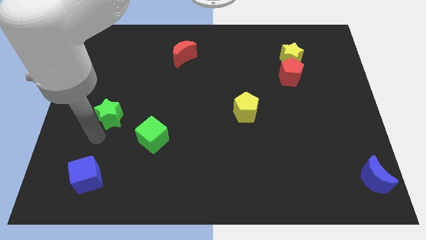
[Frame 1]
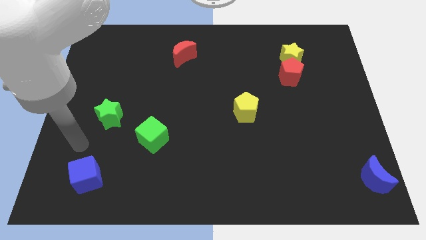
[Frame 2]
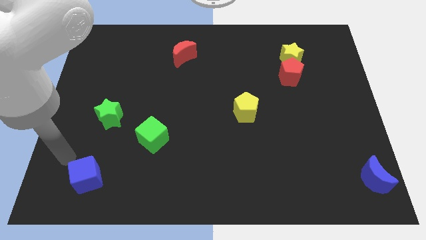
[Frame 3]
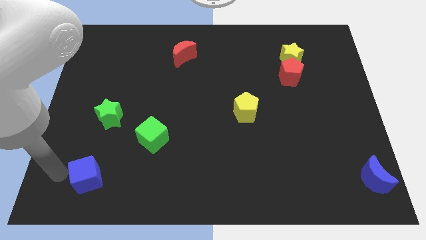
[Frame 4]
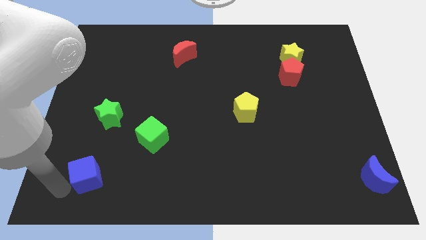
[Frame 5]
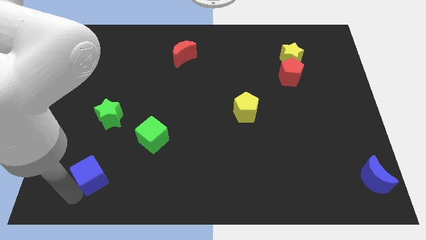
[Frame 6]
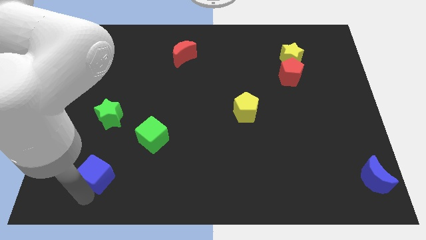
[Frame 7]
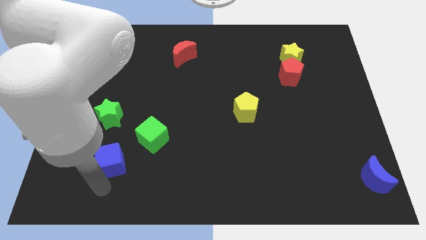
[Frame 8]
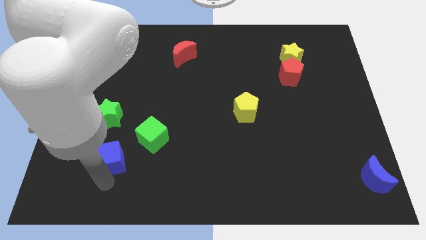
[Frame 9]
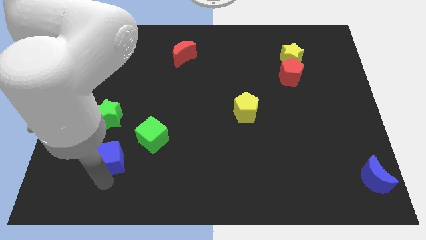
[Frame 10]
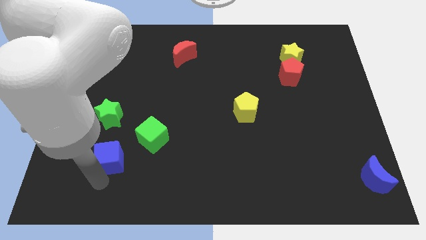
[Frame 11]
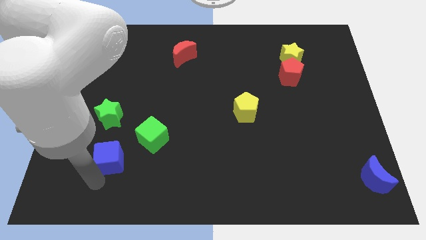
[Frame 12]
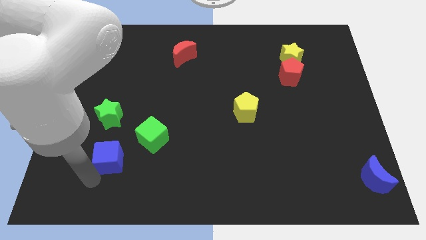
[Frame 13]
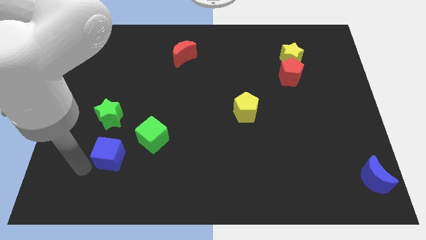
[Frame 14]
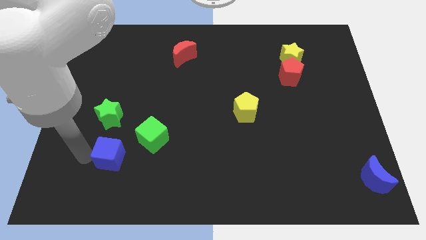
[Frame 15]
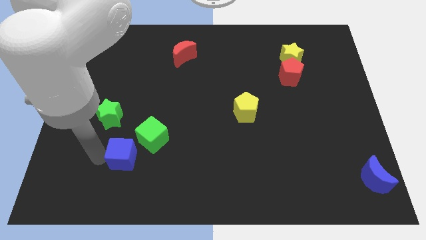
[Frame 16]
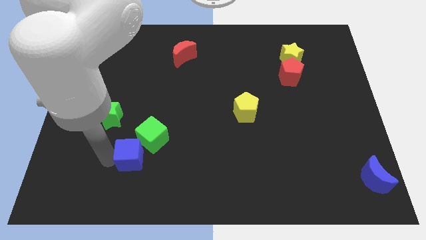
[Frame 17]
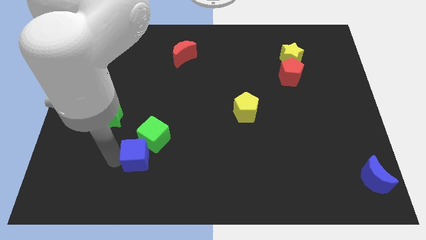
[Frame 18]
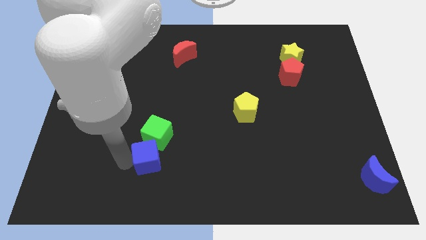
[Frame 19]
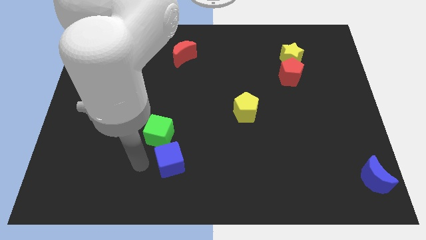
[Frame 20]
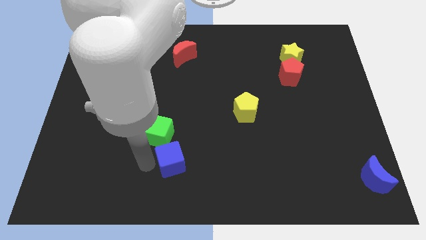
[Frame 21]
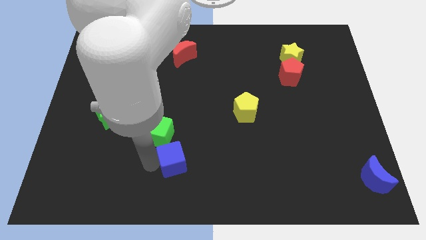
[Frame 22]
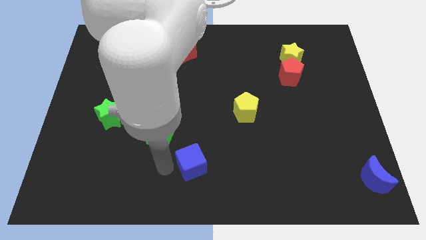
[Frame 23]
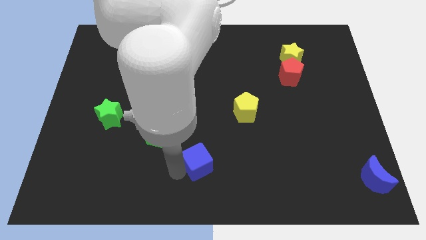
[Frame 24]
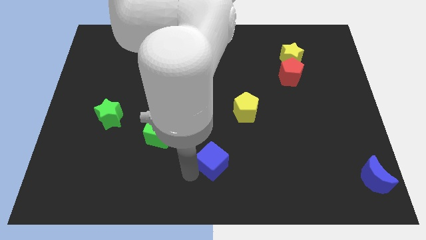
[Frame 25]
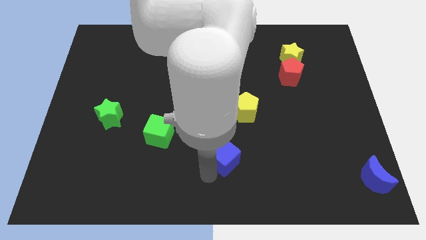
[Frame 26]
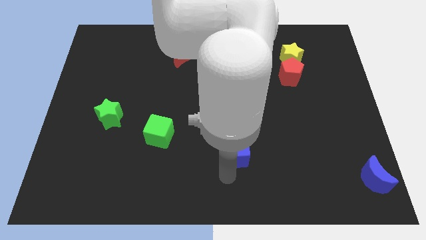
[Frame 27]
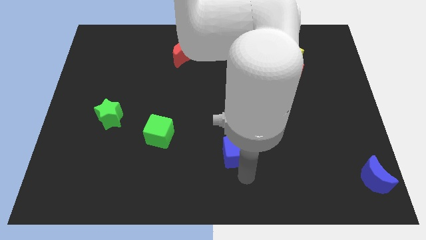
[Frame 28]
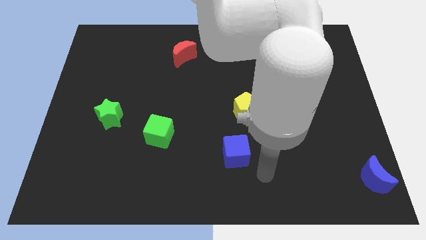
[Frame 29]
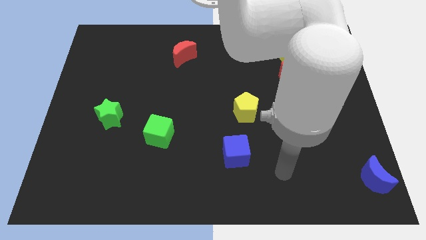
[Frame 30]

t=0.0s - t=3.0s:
drag the blue cube below the yellow pentagon

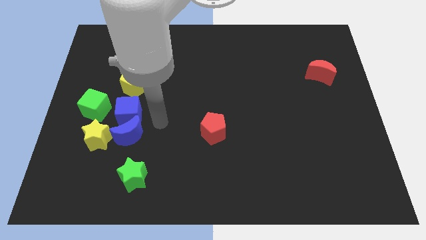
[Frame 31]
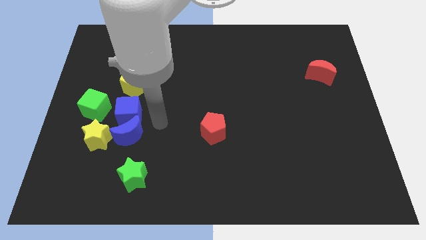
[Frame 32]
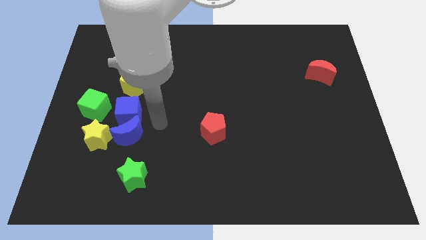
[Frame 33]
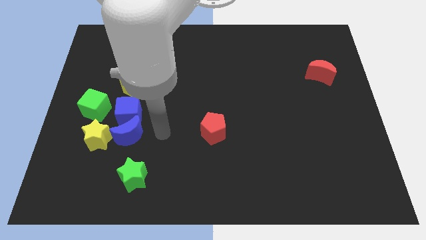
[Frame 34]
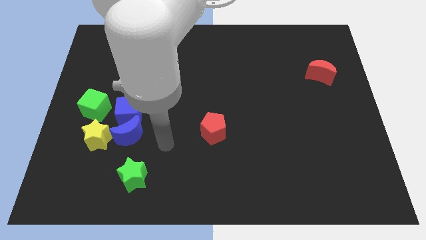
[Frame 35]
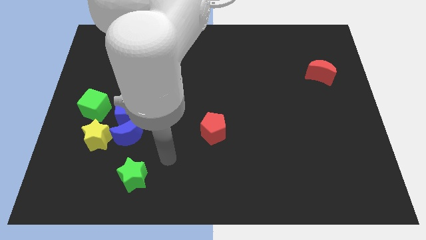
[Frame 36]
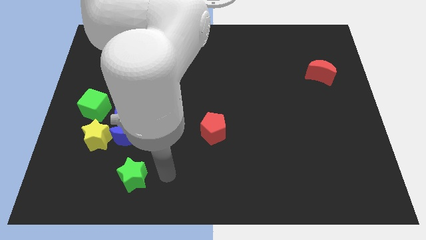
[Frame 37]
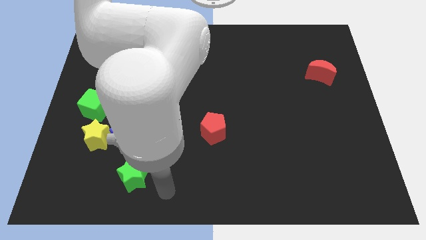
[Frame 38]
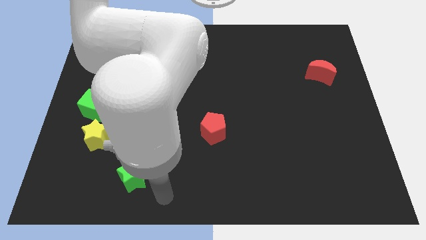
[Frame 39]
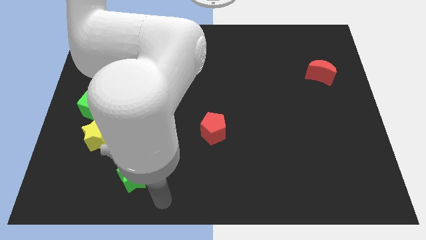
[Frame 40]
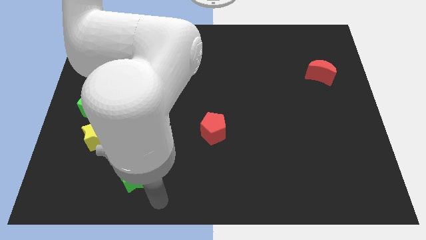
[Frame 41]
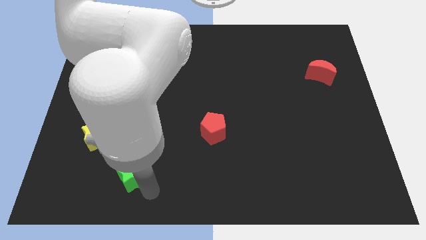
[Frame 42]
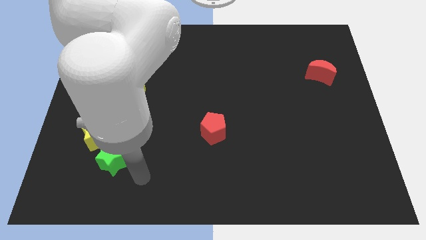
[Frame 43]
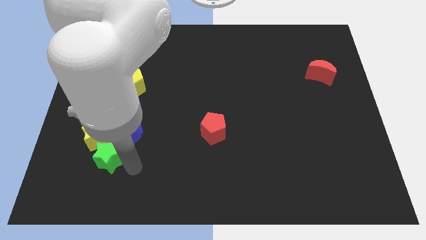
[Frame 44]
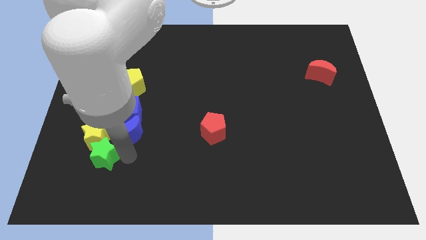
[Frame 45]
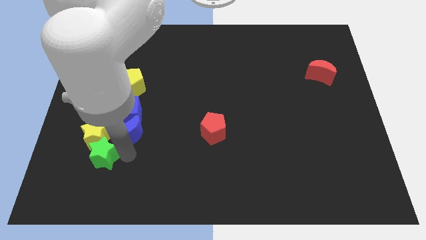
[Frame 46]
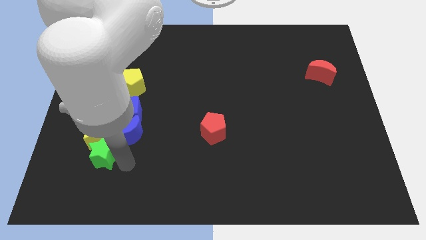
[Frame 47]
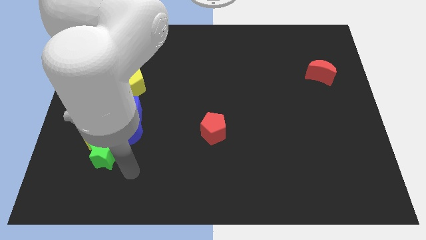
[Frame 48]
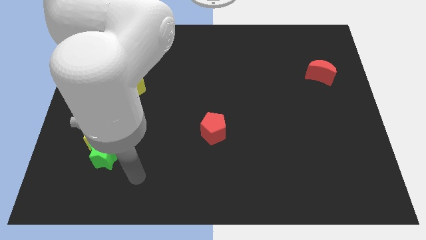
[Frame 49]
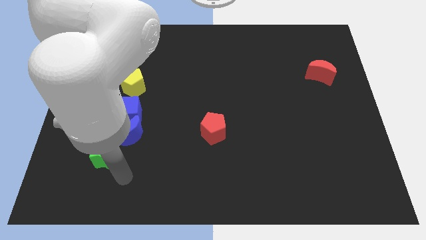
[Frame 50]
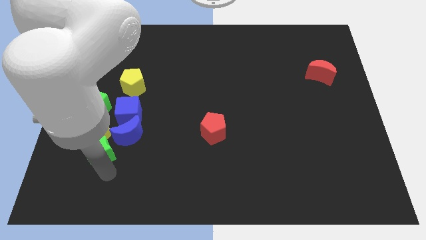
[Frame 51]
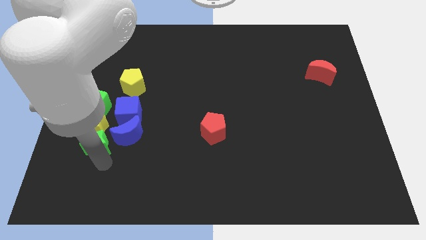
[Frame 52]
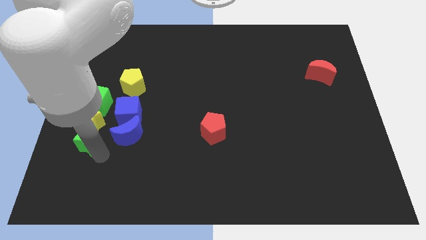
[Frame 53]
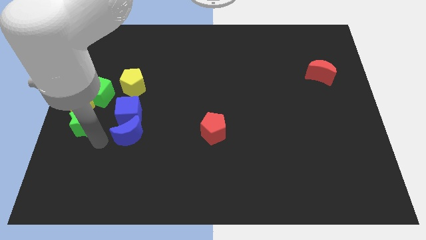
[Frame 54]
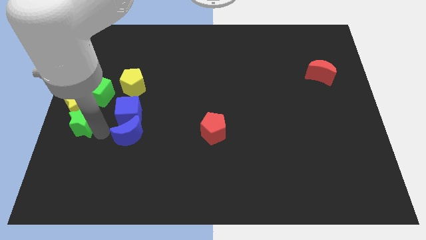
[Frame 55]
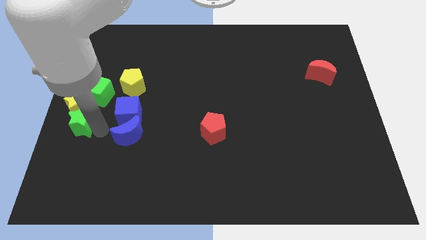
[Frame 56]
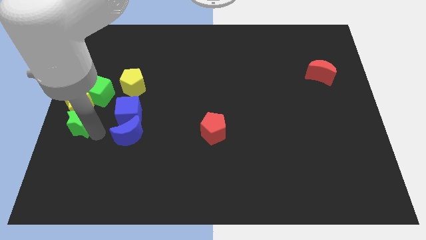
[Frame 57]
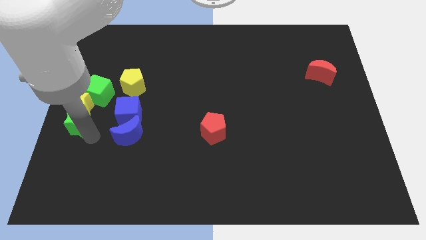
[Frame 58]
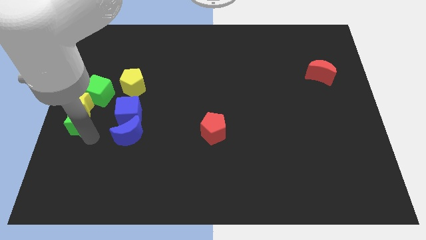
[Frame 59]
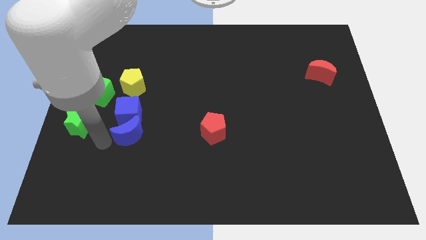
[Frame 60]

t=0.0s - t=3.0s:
push the green star to the left of the blue crescent

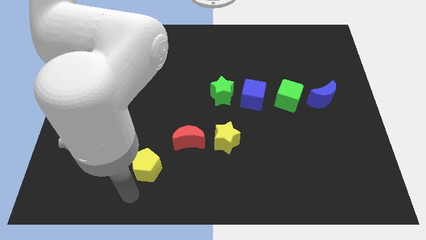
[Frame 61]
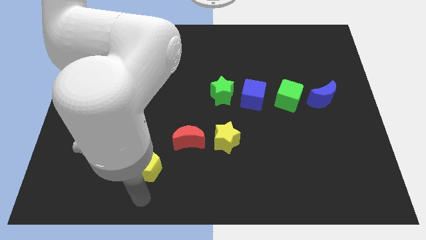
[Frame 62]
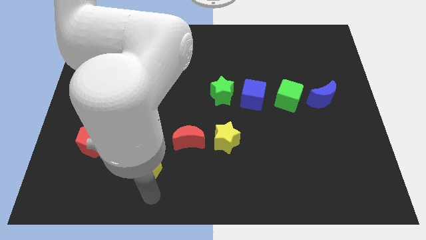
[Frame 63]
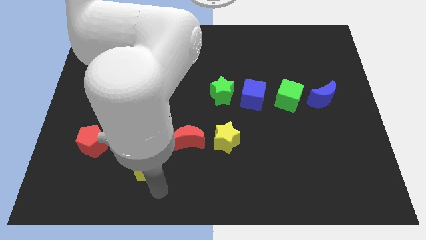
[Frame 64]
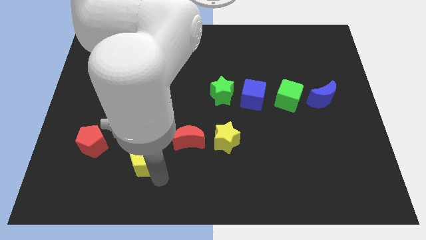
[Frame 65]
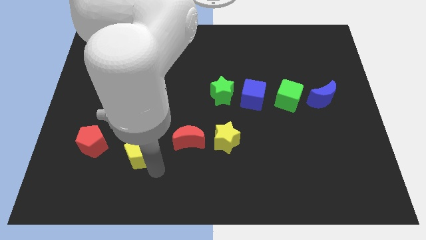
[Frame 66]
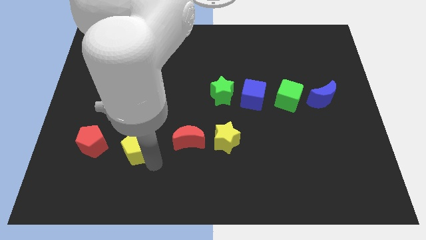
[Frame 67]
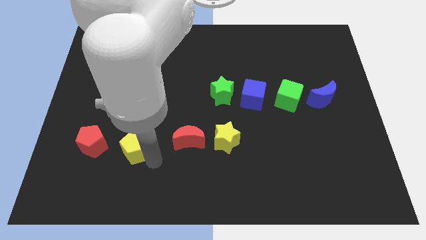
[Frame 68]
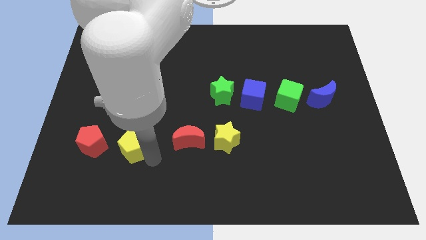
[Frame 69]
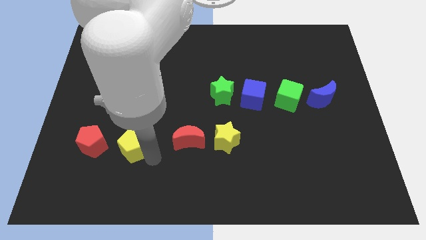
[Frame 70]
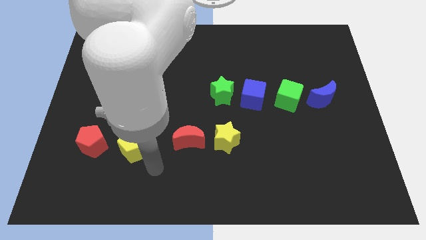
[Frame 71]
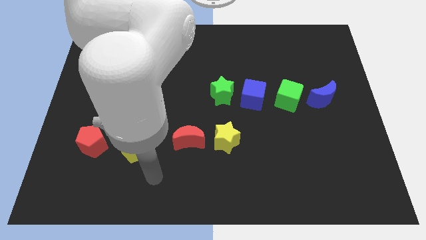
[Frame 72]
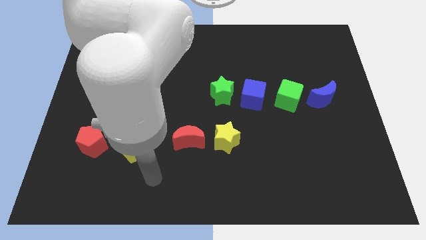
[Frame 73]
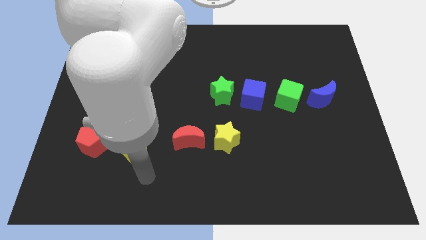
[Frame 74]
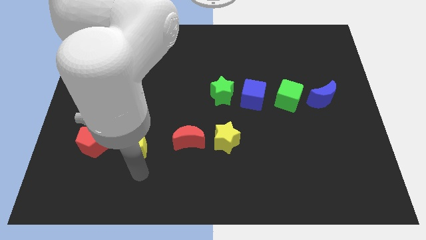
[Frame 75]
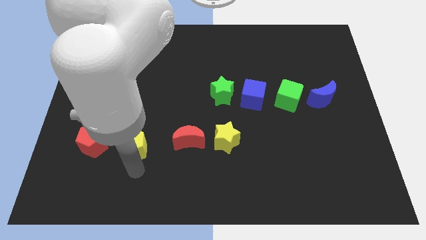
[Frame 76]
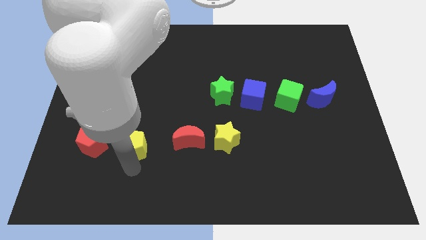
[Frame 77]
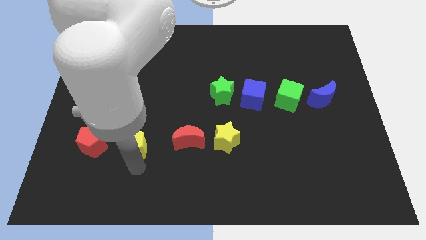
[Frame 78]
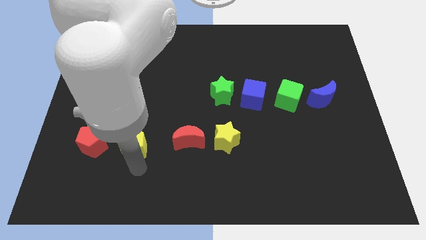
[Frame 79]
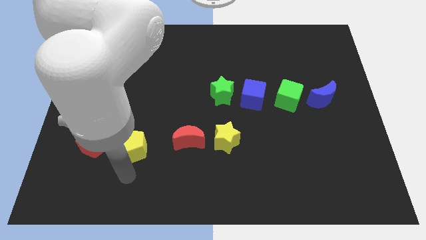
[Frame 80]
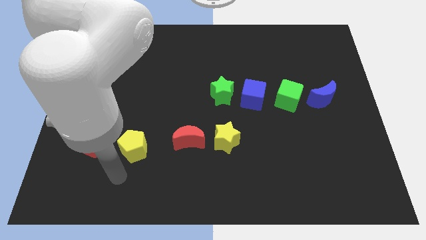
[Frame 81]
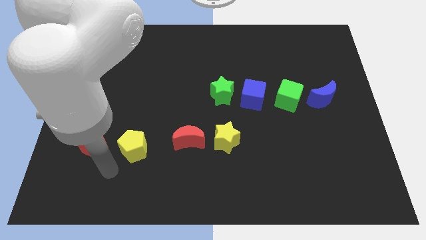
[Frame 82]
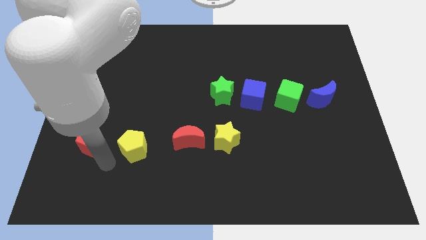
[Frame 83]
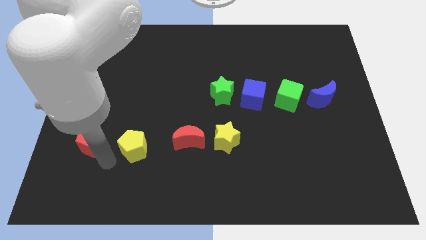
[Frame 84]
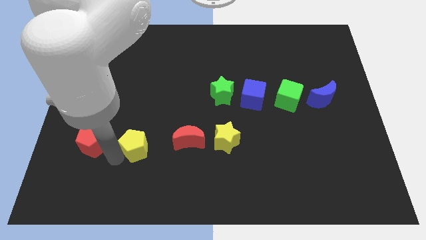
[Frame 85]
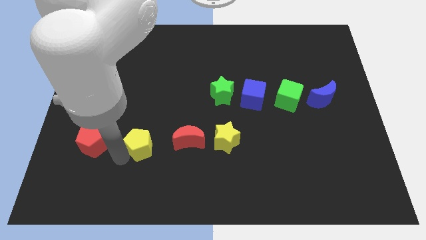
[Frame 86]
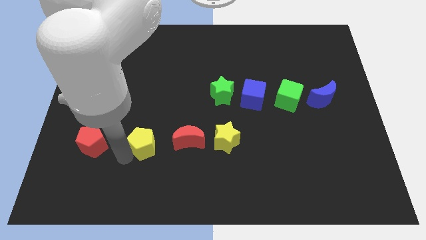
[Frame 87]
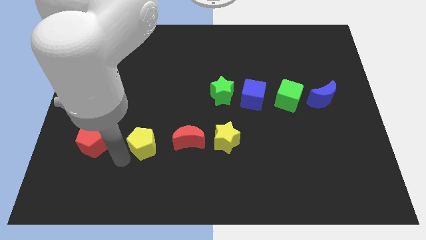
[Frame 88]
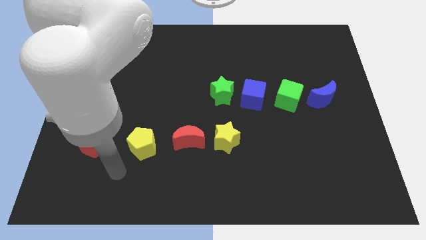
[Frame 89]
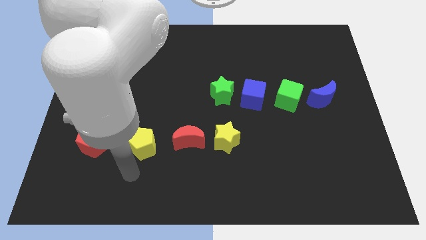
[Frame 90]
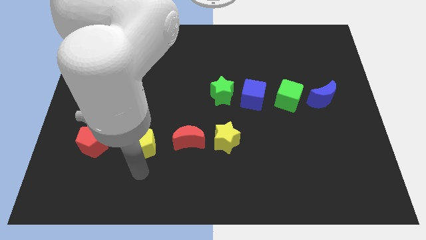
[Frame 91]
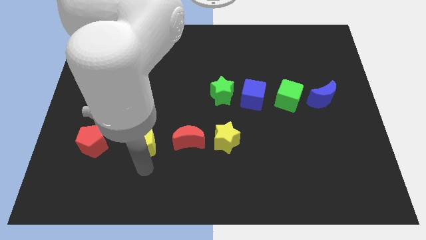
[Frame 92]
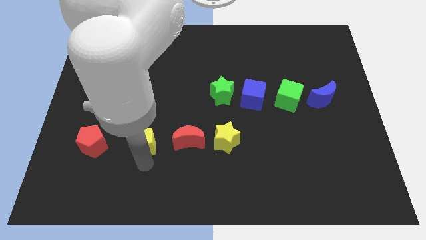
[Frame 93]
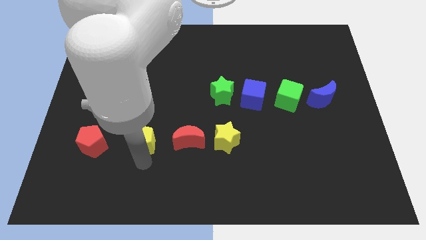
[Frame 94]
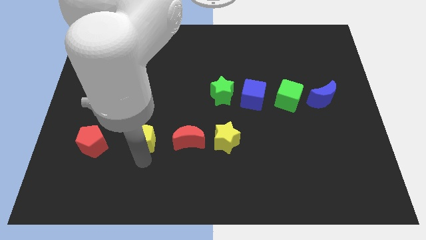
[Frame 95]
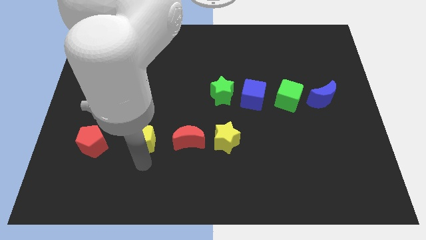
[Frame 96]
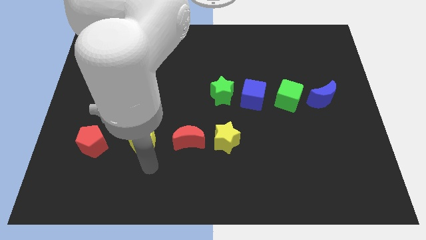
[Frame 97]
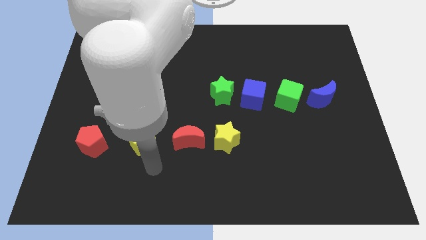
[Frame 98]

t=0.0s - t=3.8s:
place yellow pentagon in between the red pentagon and red crescent
